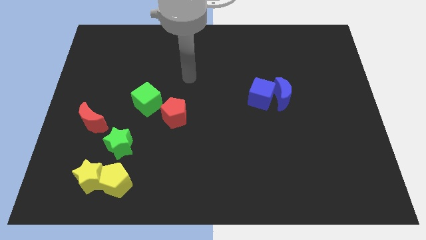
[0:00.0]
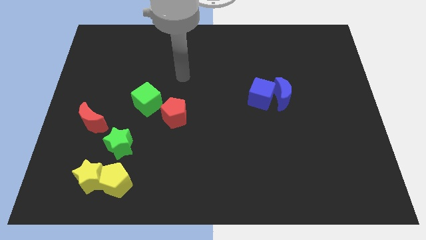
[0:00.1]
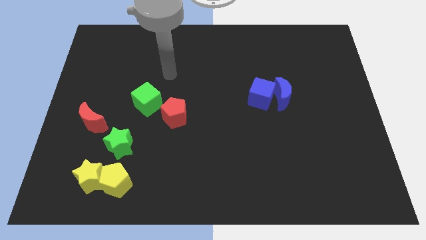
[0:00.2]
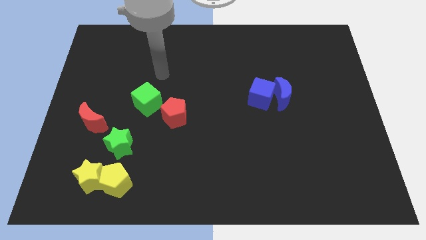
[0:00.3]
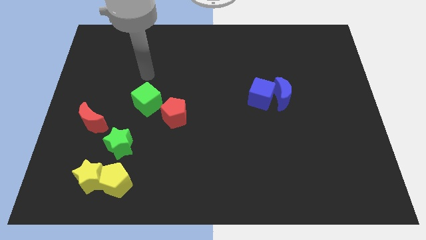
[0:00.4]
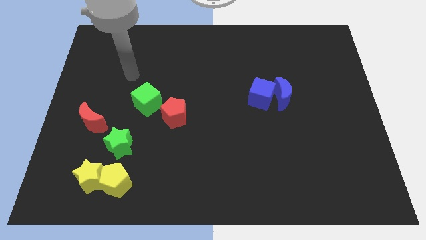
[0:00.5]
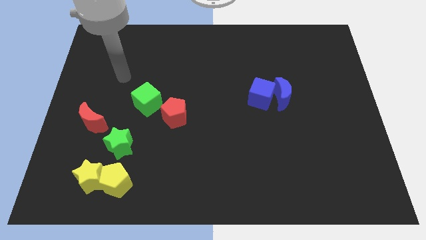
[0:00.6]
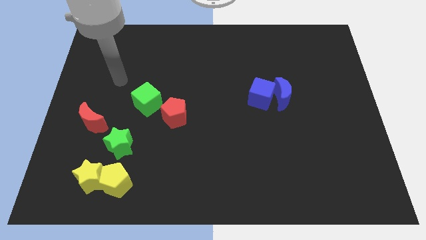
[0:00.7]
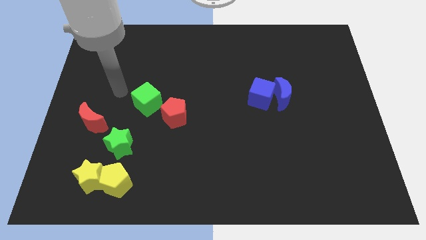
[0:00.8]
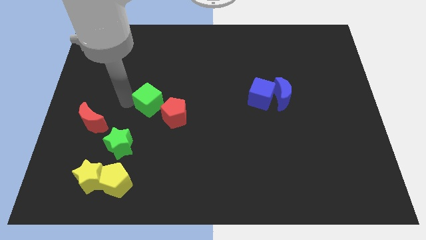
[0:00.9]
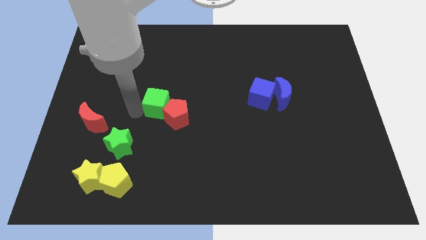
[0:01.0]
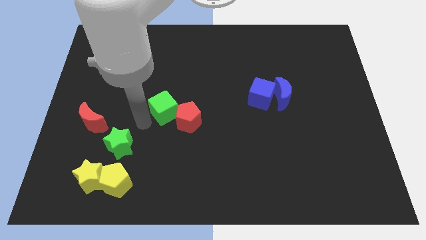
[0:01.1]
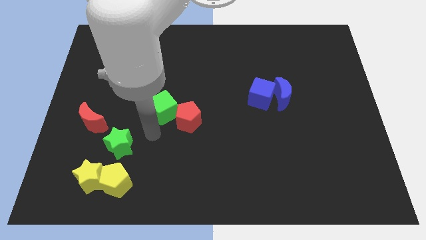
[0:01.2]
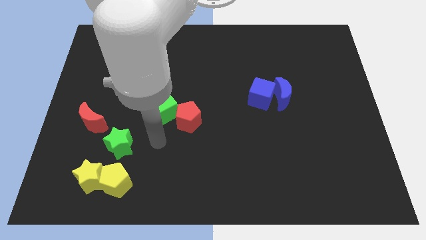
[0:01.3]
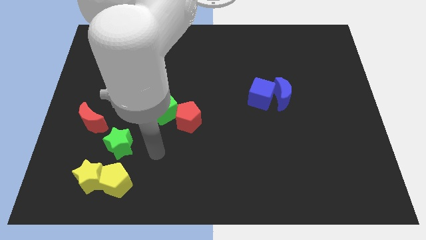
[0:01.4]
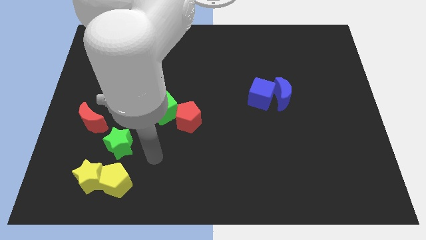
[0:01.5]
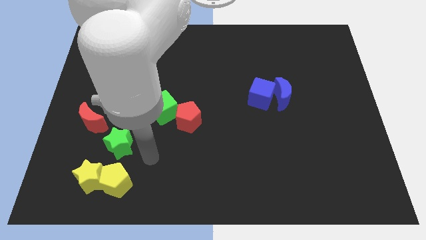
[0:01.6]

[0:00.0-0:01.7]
move the green cube intlo the red pentagon

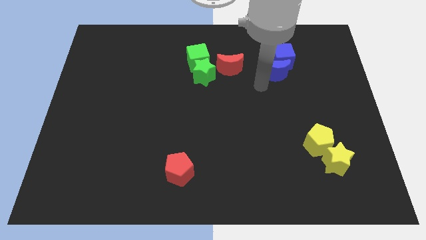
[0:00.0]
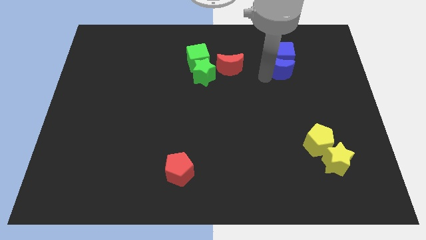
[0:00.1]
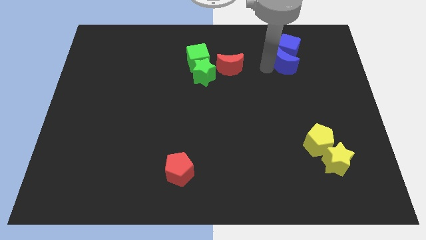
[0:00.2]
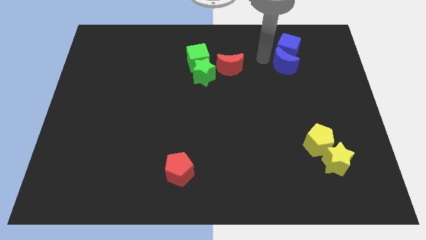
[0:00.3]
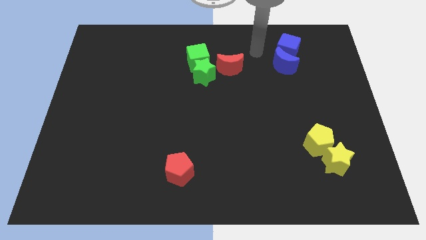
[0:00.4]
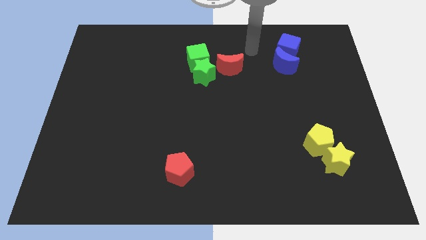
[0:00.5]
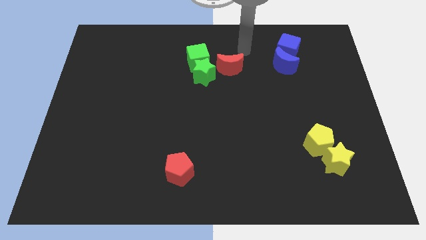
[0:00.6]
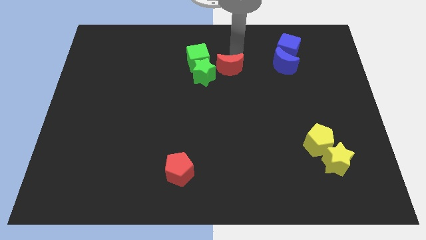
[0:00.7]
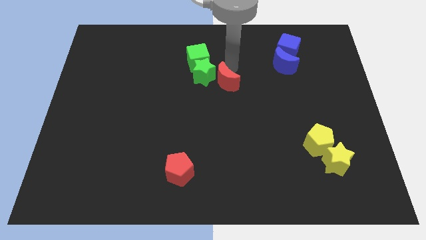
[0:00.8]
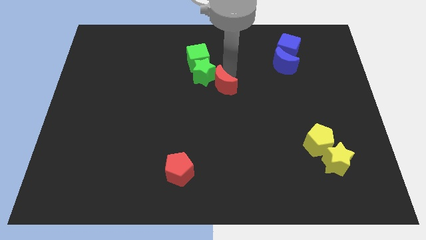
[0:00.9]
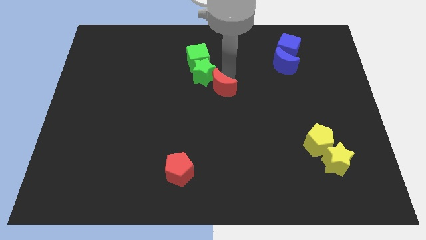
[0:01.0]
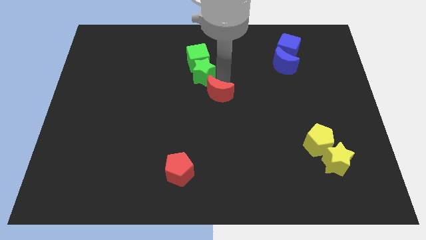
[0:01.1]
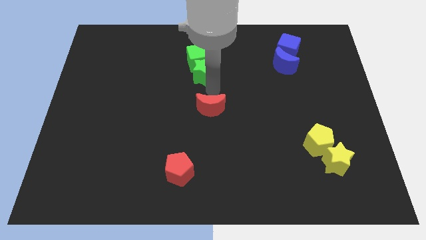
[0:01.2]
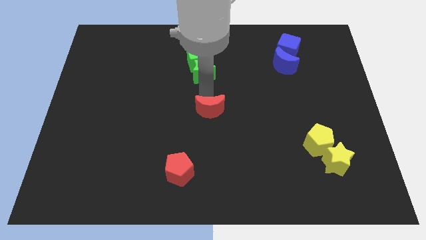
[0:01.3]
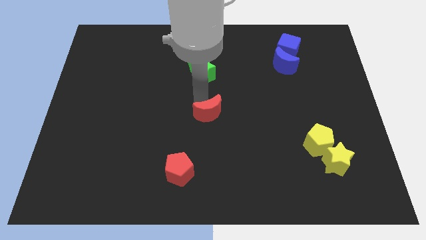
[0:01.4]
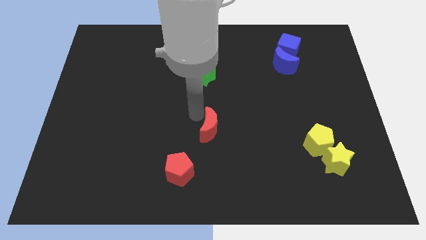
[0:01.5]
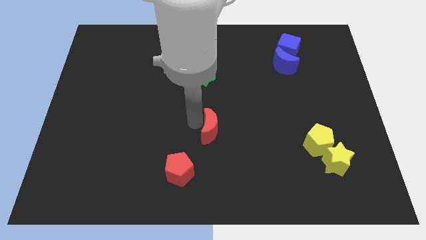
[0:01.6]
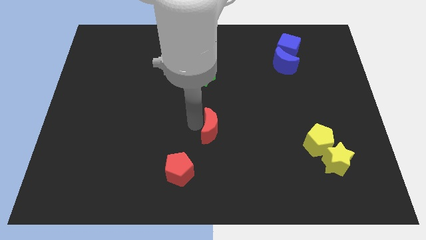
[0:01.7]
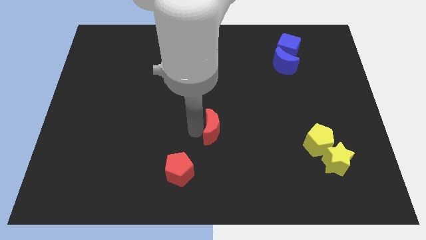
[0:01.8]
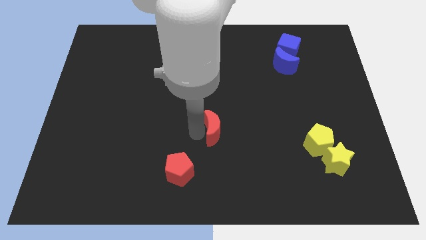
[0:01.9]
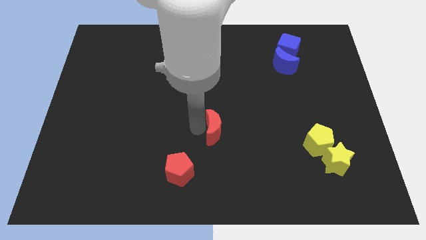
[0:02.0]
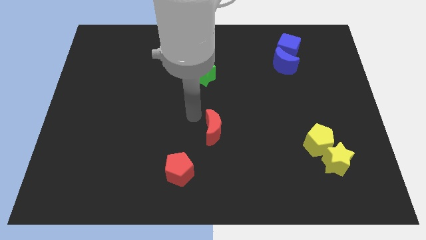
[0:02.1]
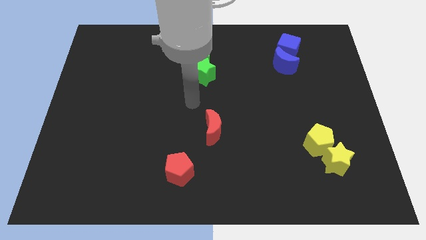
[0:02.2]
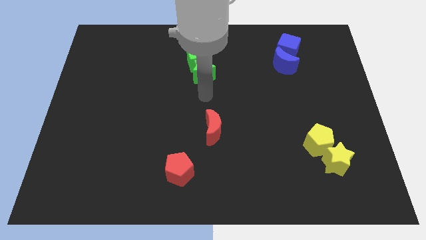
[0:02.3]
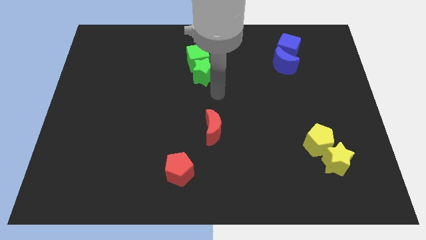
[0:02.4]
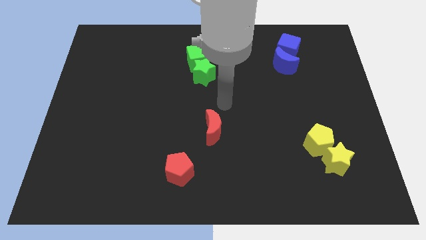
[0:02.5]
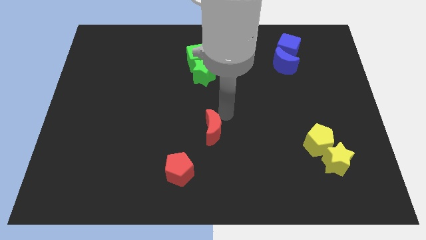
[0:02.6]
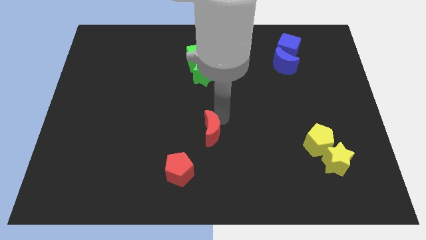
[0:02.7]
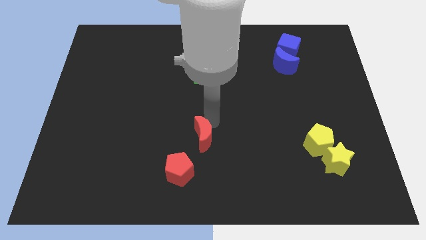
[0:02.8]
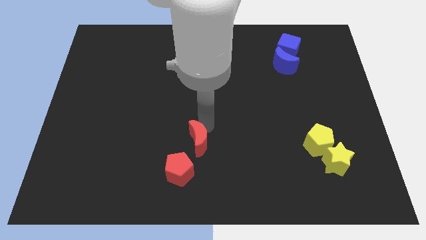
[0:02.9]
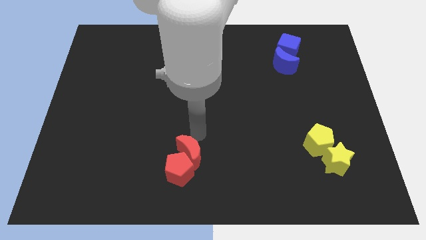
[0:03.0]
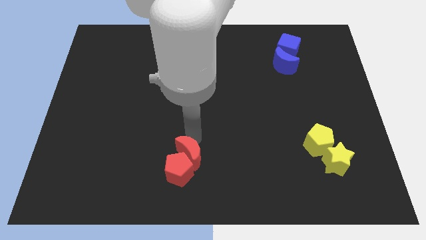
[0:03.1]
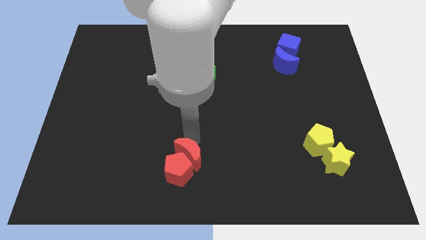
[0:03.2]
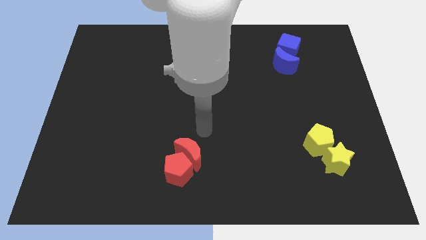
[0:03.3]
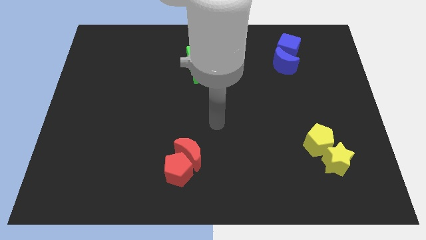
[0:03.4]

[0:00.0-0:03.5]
push the red crescent into the red pentagon

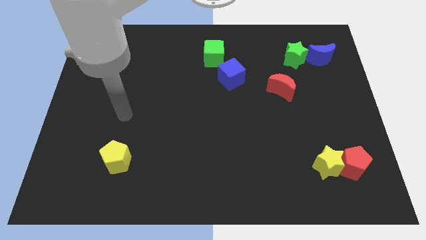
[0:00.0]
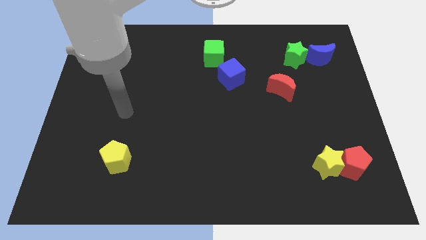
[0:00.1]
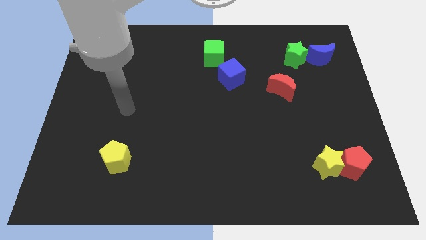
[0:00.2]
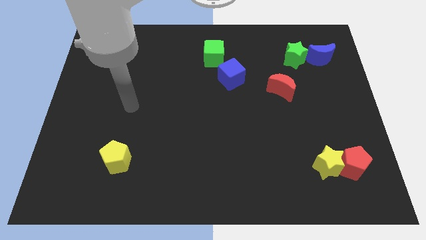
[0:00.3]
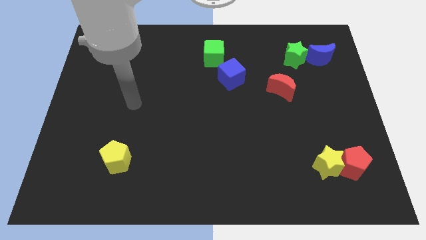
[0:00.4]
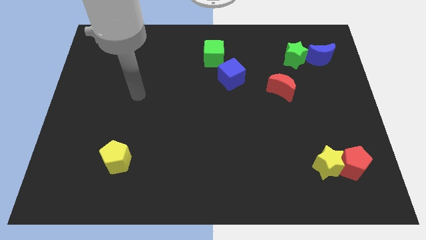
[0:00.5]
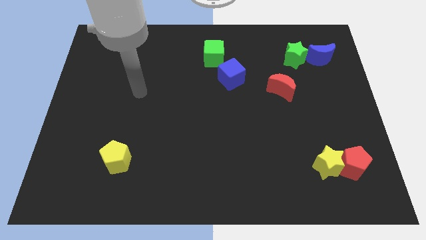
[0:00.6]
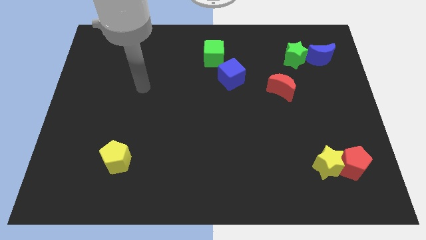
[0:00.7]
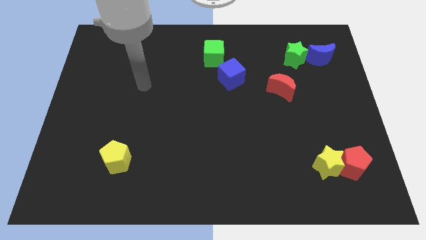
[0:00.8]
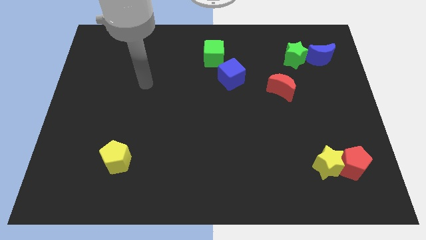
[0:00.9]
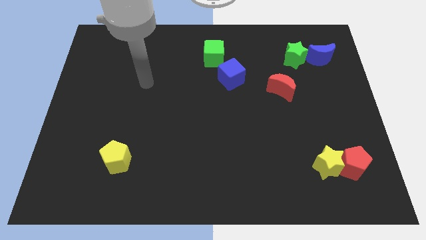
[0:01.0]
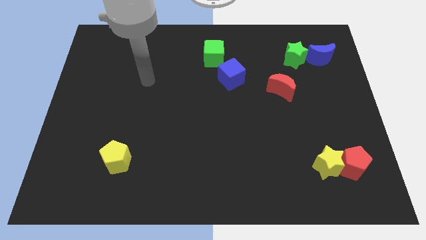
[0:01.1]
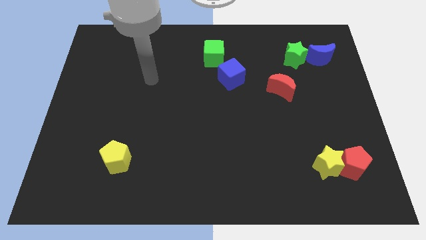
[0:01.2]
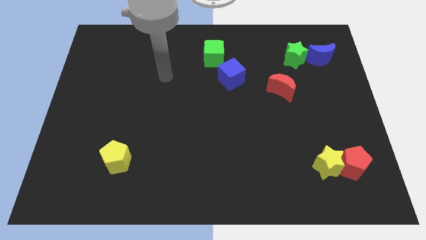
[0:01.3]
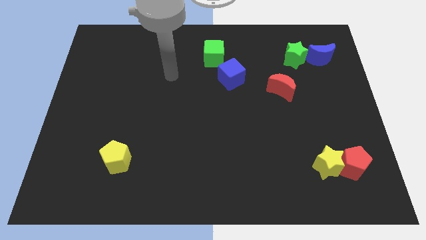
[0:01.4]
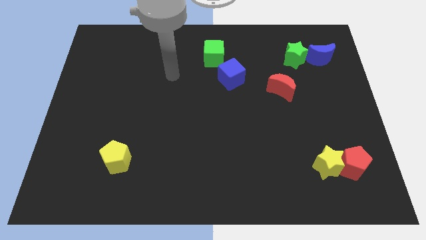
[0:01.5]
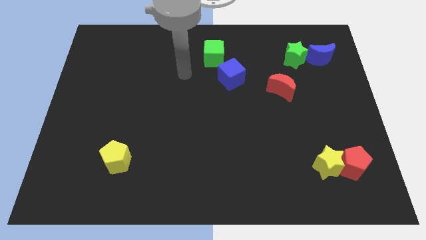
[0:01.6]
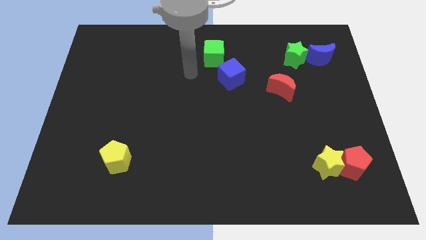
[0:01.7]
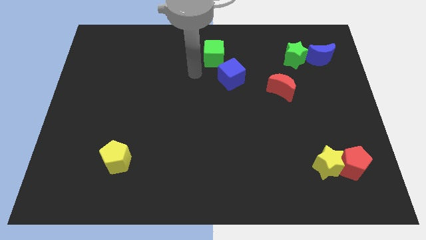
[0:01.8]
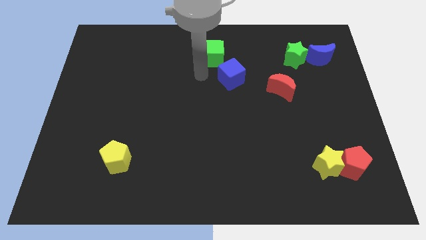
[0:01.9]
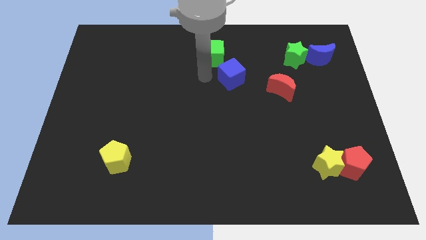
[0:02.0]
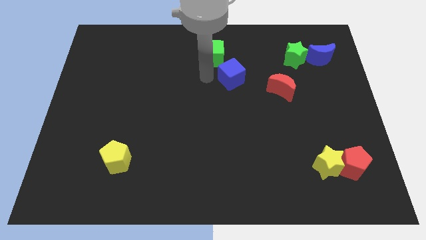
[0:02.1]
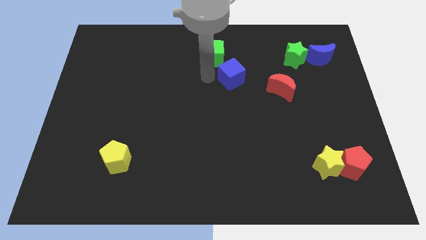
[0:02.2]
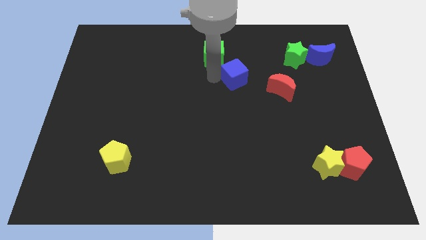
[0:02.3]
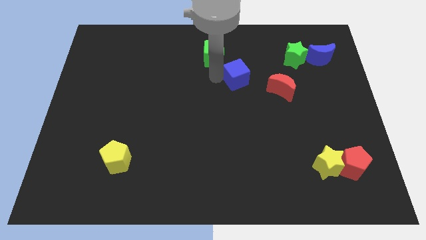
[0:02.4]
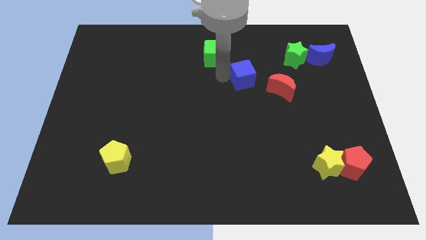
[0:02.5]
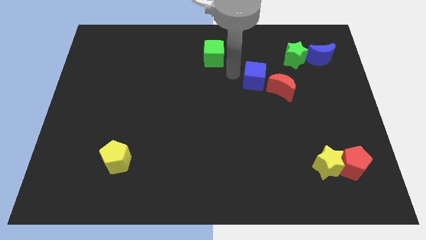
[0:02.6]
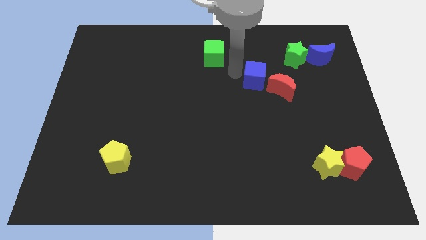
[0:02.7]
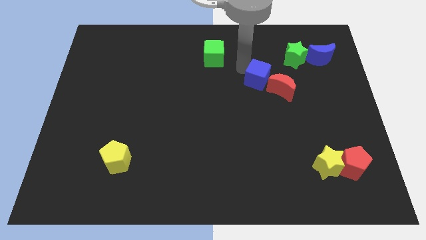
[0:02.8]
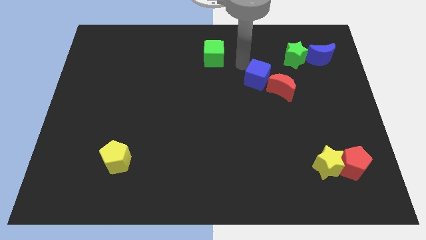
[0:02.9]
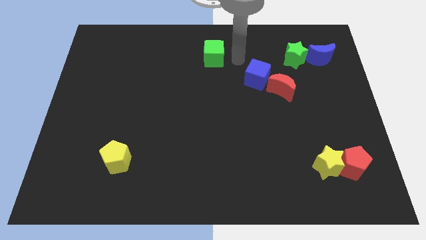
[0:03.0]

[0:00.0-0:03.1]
place blue cube diagonally to the red crescent

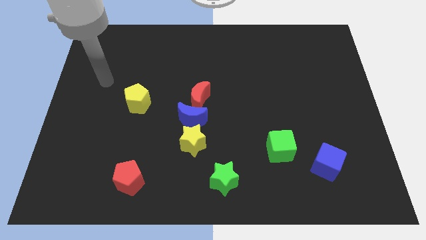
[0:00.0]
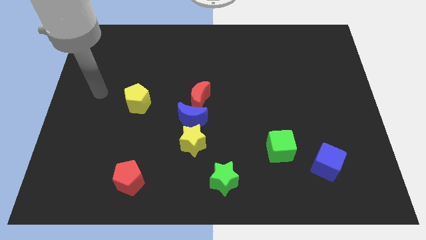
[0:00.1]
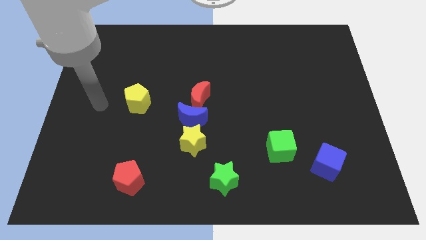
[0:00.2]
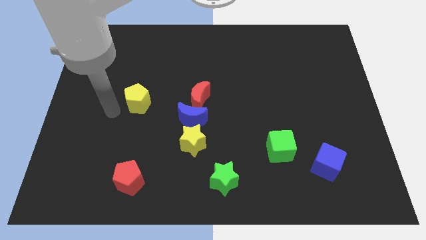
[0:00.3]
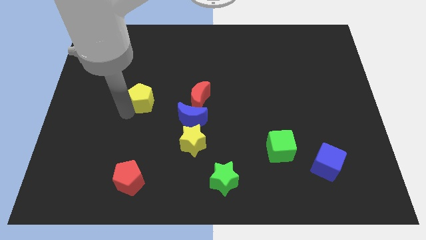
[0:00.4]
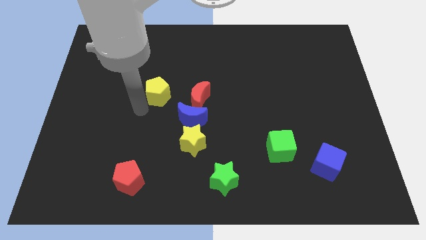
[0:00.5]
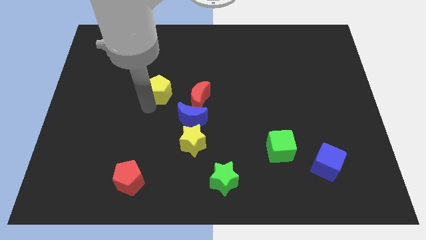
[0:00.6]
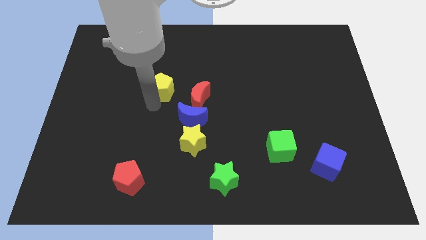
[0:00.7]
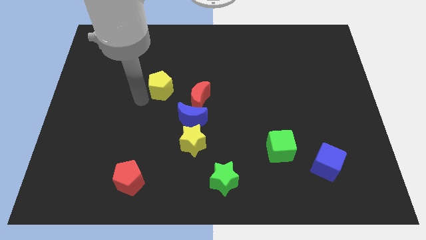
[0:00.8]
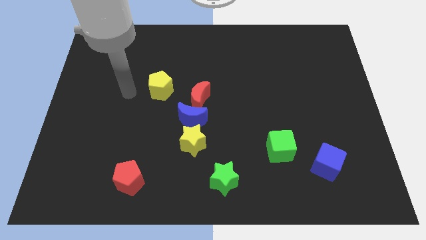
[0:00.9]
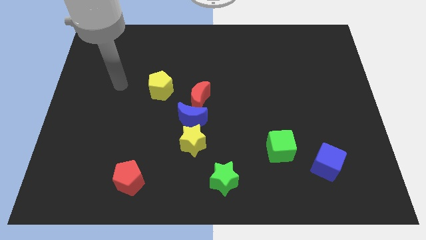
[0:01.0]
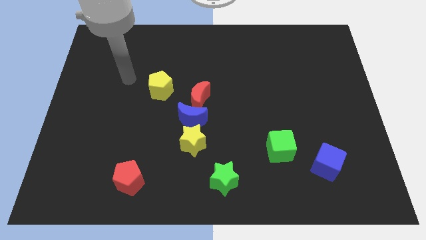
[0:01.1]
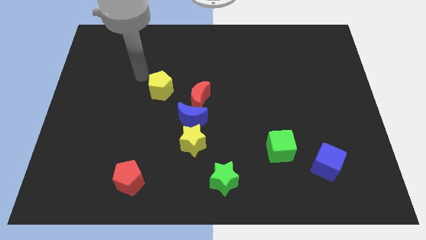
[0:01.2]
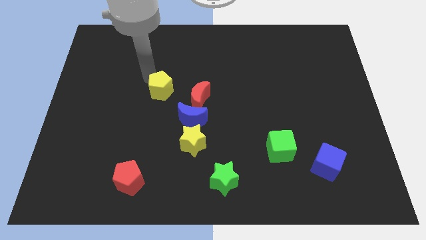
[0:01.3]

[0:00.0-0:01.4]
push the yellow pentagon close to the red moon
